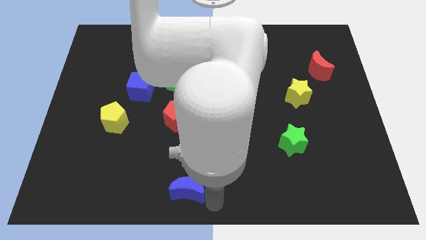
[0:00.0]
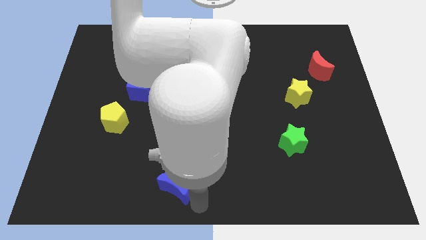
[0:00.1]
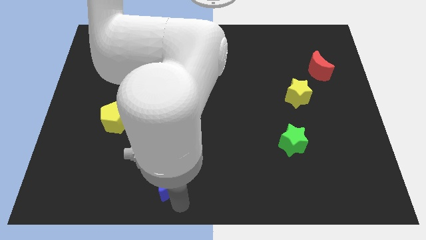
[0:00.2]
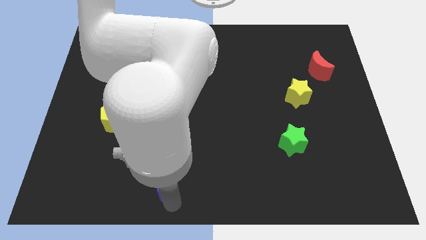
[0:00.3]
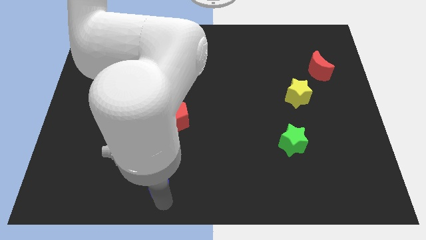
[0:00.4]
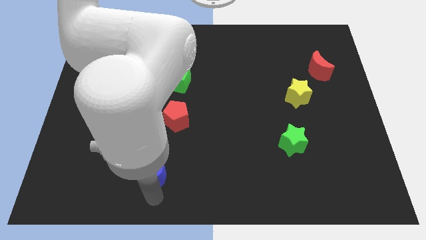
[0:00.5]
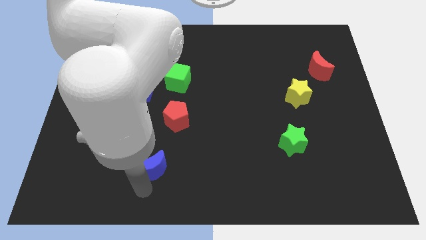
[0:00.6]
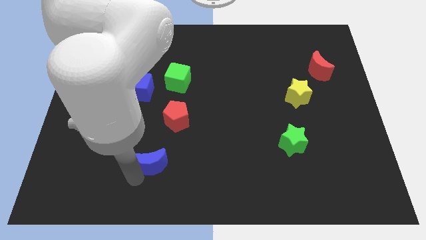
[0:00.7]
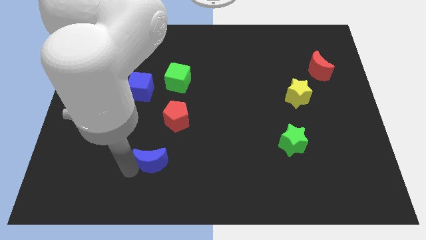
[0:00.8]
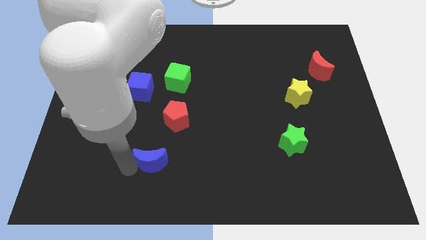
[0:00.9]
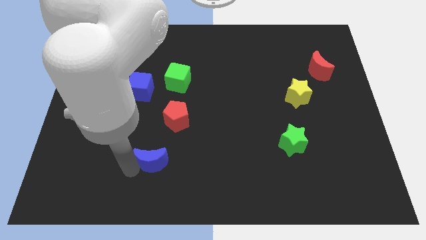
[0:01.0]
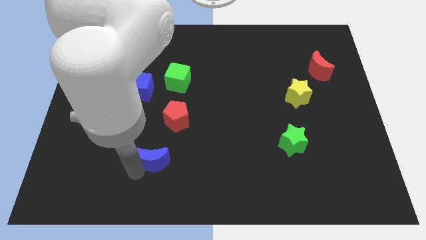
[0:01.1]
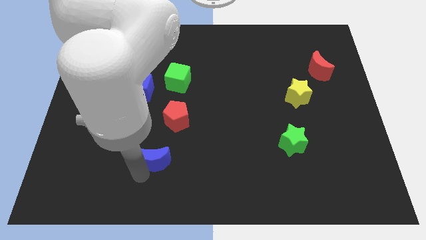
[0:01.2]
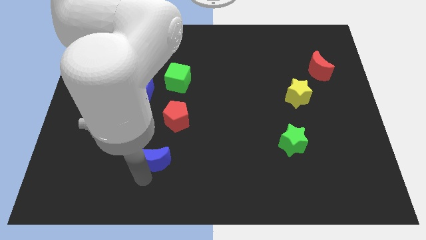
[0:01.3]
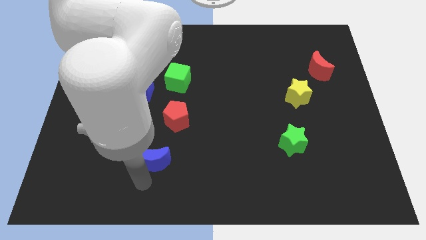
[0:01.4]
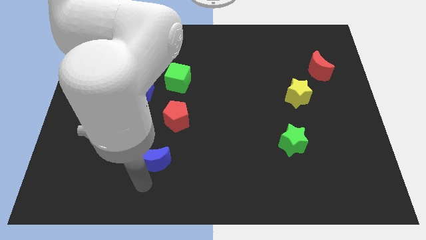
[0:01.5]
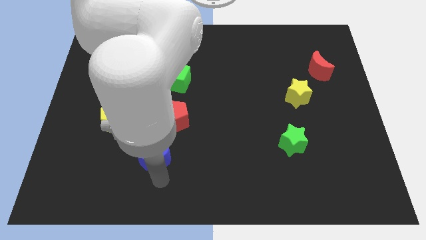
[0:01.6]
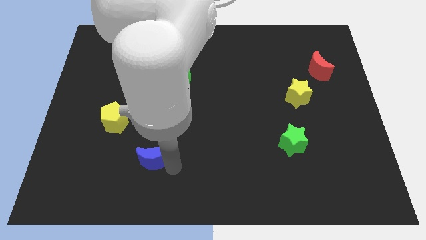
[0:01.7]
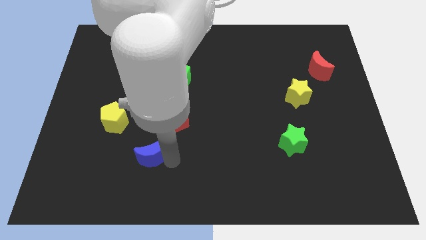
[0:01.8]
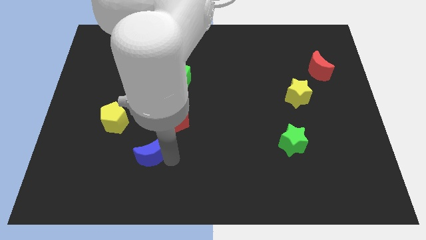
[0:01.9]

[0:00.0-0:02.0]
move the blue crescent towards top

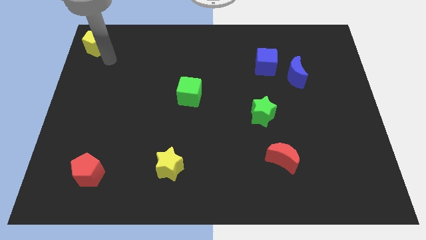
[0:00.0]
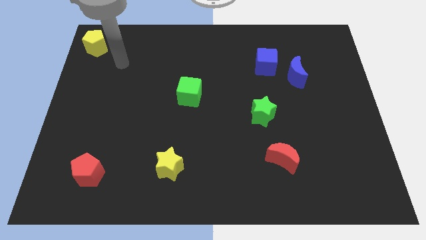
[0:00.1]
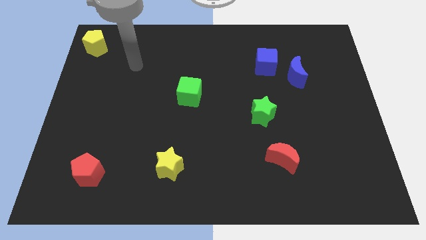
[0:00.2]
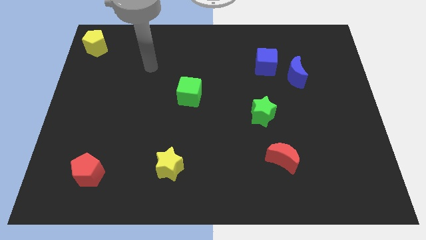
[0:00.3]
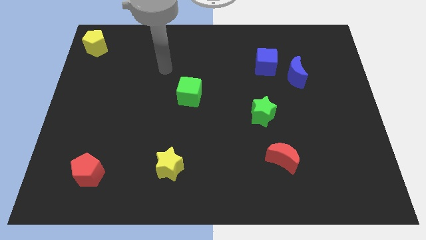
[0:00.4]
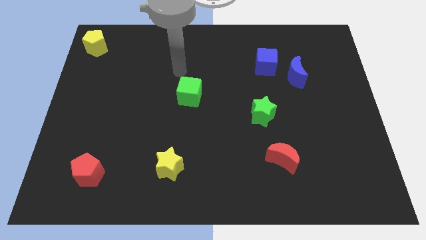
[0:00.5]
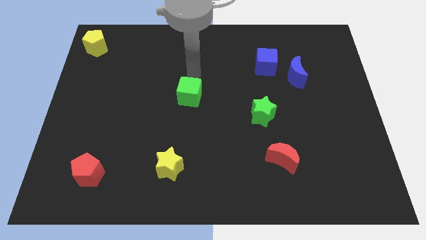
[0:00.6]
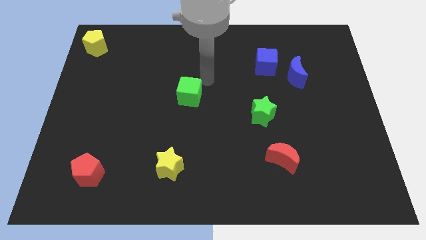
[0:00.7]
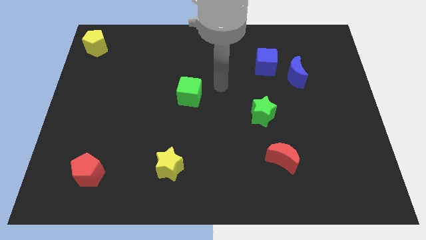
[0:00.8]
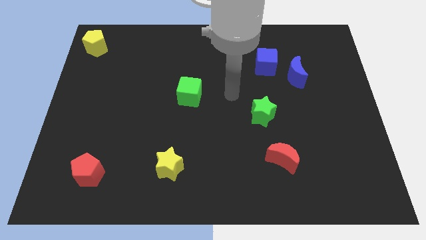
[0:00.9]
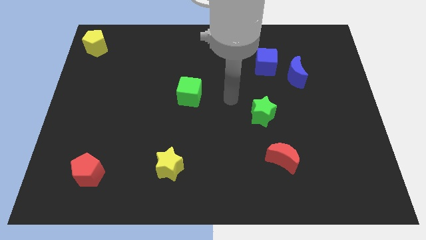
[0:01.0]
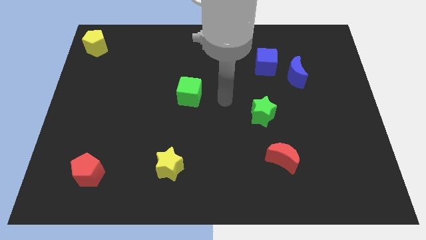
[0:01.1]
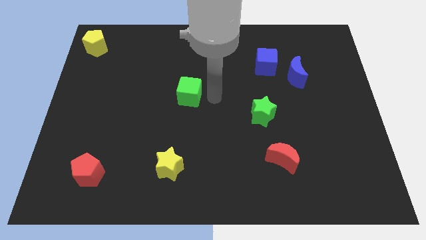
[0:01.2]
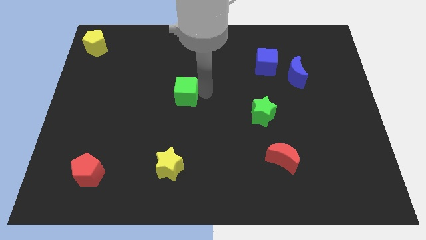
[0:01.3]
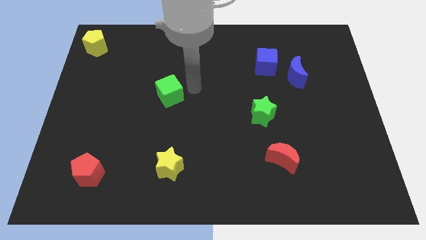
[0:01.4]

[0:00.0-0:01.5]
put your arm at the top right side of the green cube

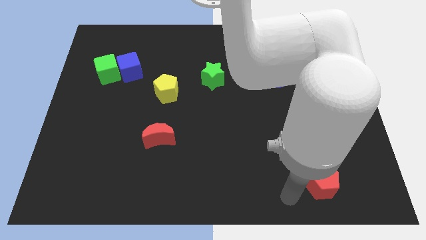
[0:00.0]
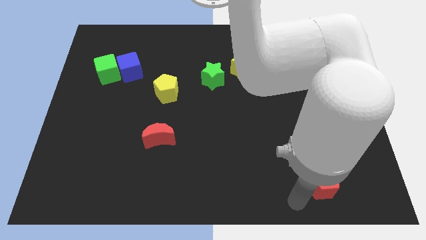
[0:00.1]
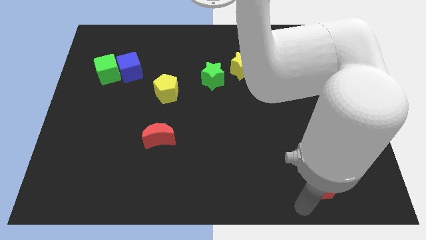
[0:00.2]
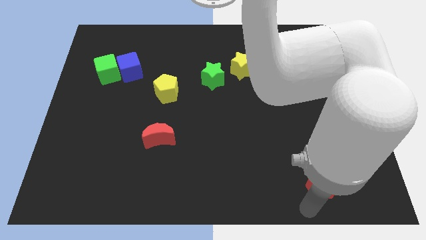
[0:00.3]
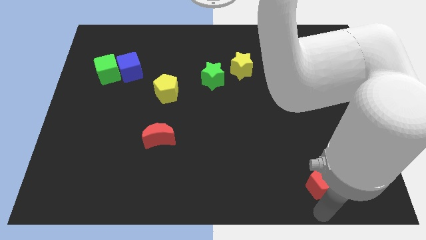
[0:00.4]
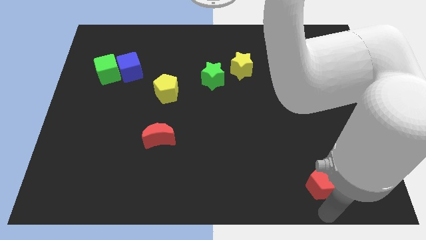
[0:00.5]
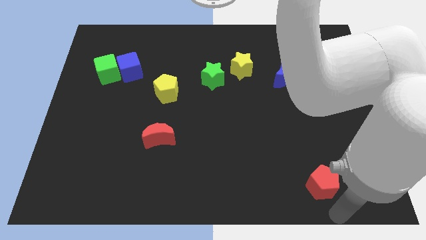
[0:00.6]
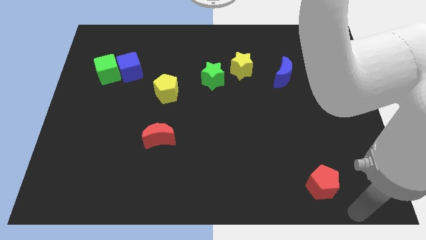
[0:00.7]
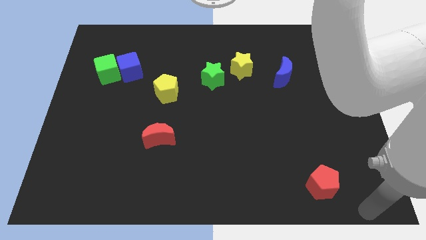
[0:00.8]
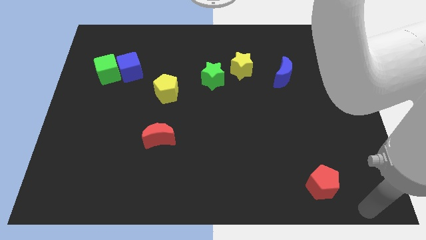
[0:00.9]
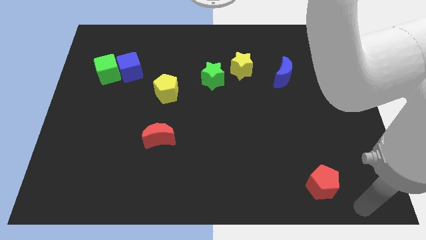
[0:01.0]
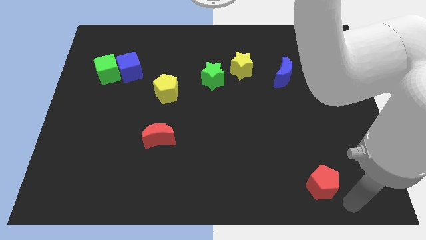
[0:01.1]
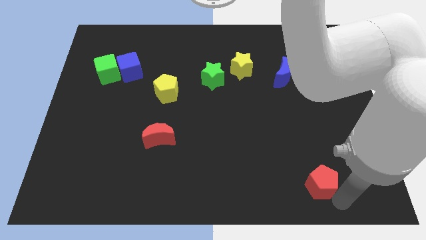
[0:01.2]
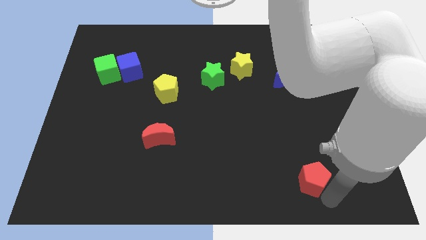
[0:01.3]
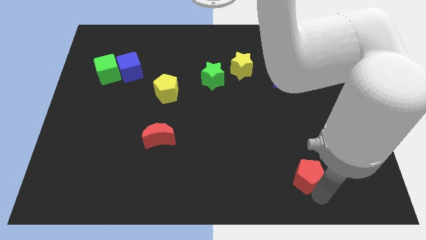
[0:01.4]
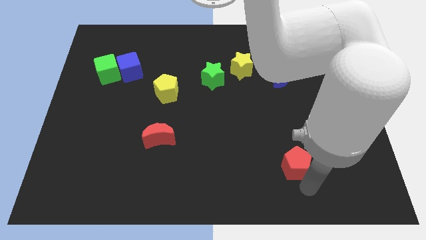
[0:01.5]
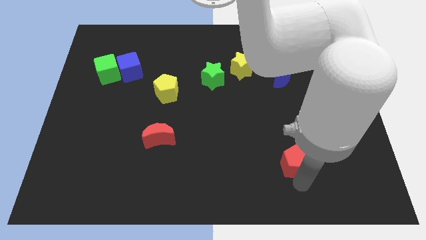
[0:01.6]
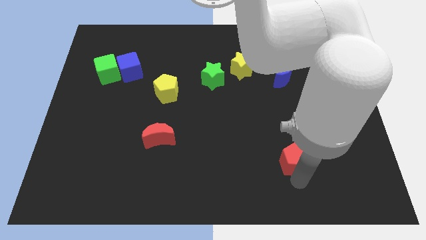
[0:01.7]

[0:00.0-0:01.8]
move the red pentagon up slightly

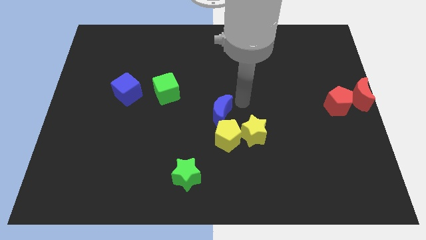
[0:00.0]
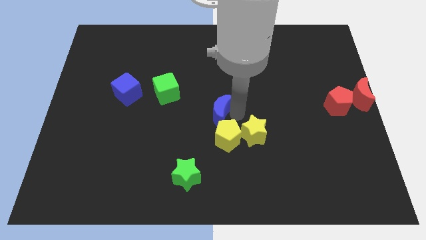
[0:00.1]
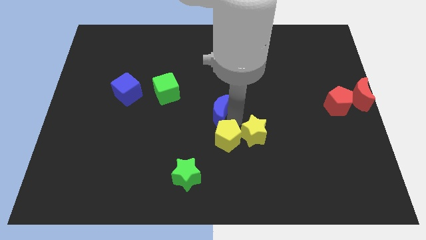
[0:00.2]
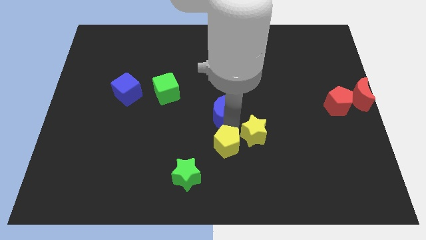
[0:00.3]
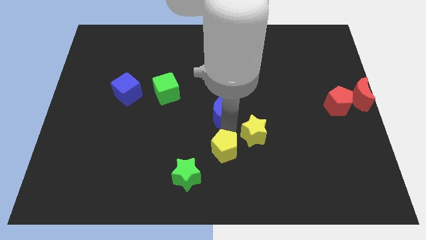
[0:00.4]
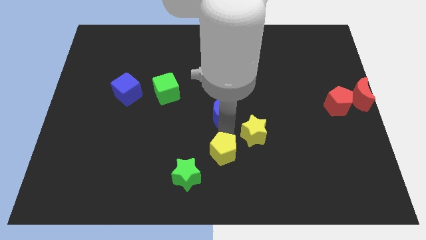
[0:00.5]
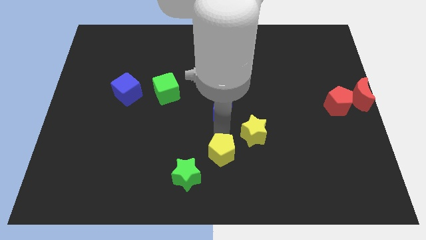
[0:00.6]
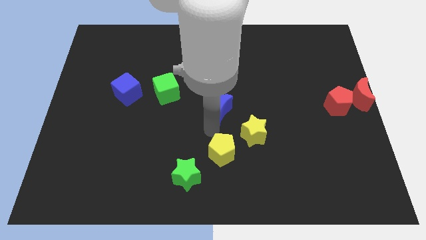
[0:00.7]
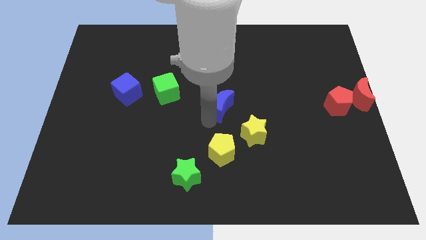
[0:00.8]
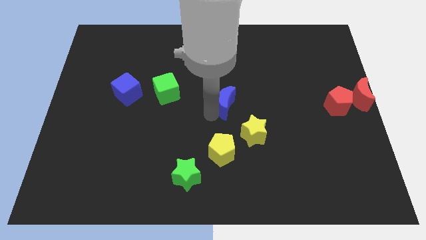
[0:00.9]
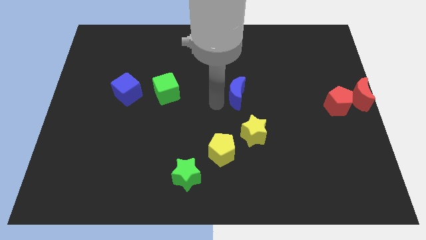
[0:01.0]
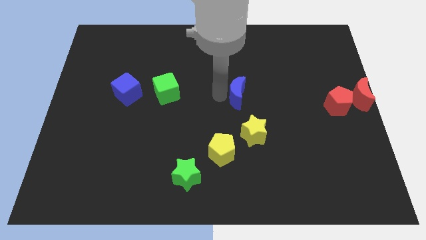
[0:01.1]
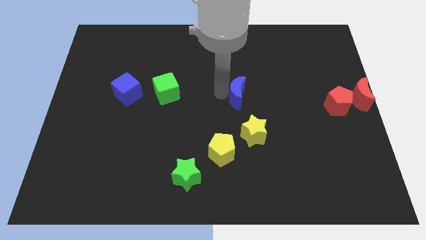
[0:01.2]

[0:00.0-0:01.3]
push the yellow pentagon towards the bottom of the board a bit

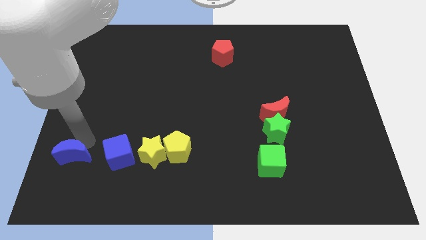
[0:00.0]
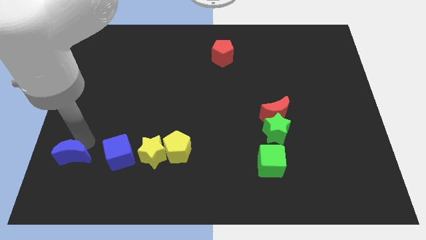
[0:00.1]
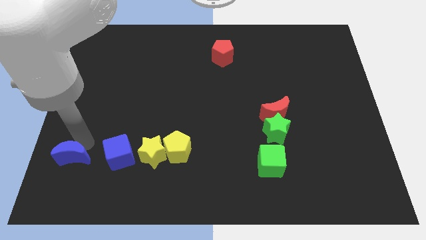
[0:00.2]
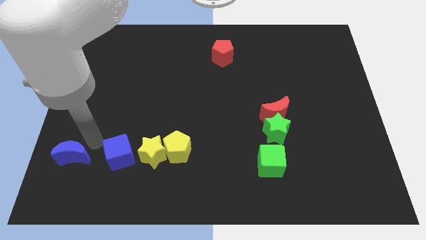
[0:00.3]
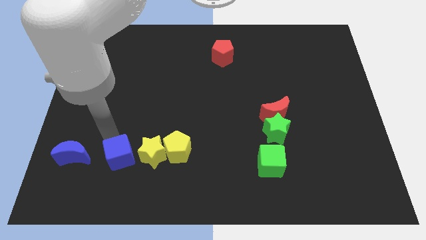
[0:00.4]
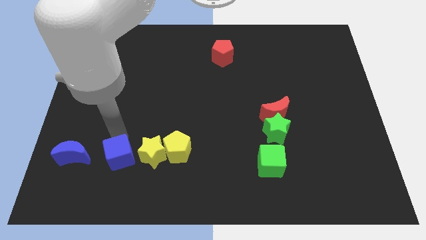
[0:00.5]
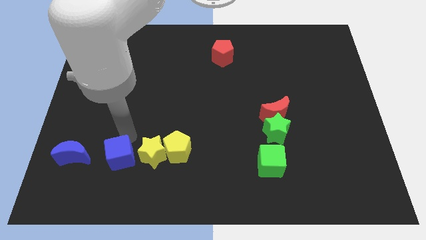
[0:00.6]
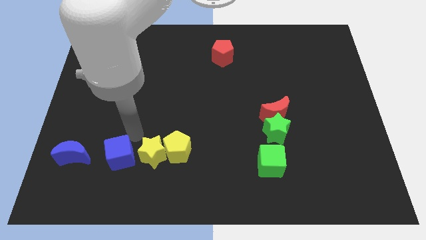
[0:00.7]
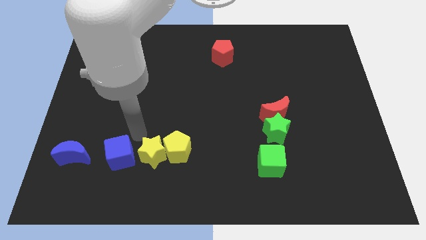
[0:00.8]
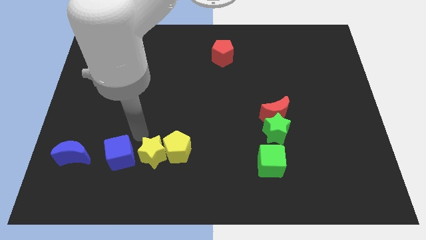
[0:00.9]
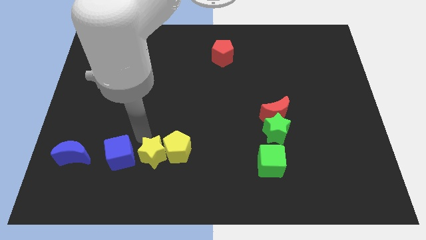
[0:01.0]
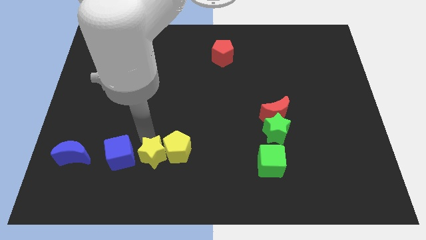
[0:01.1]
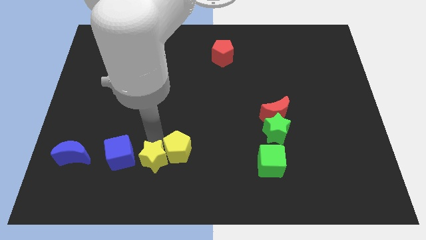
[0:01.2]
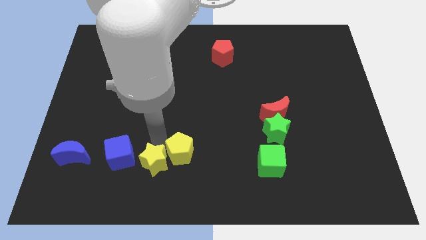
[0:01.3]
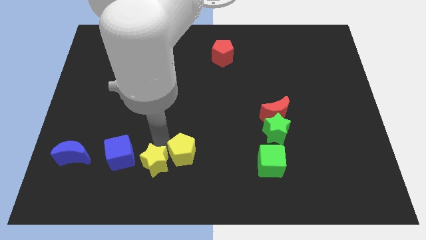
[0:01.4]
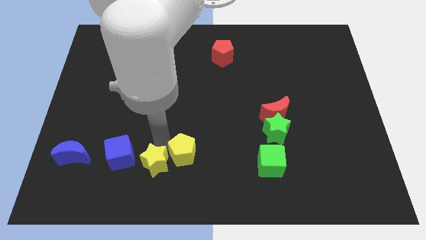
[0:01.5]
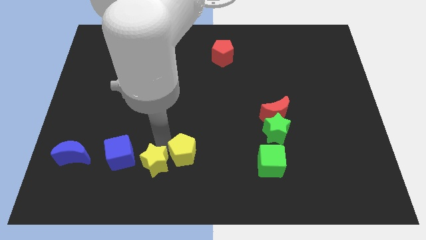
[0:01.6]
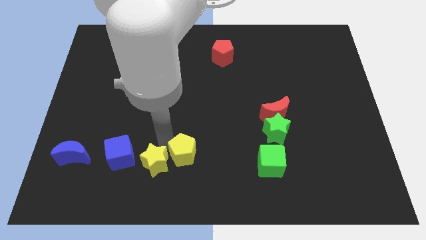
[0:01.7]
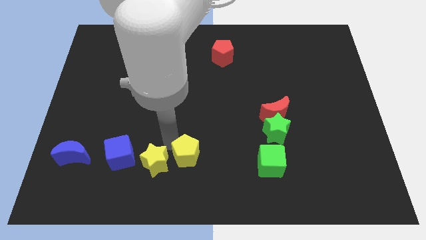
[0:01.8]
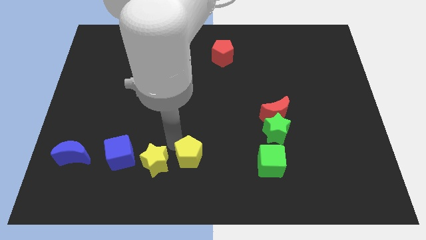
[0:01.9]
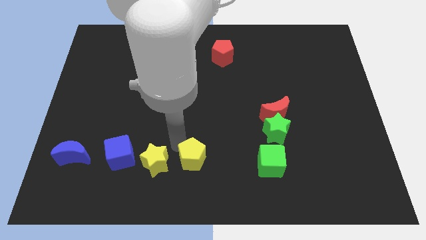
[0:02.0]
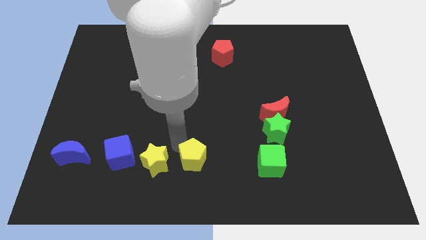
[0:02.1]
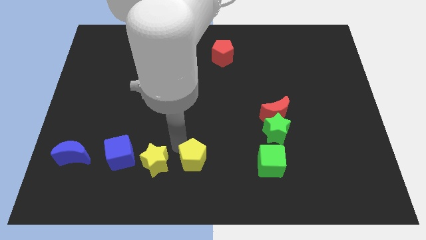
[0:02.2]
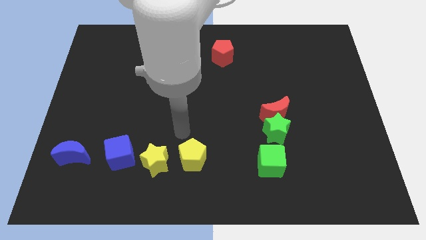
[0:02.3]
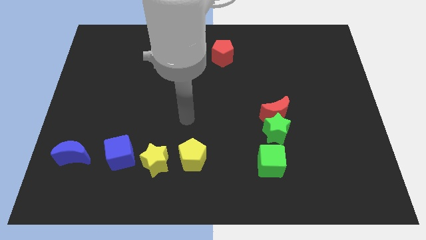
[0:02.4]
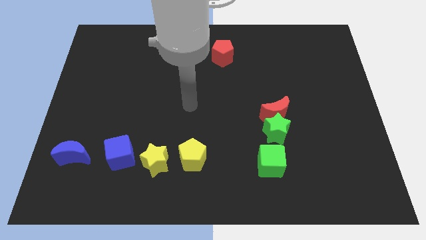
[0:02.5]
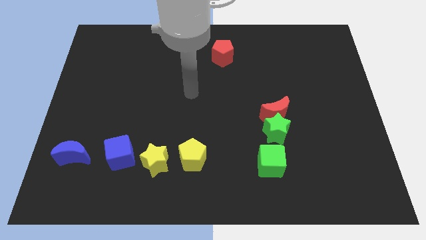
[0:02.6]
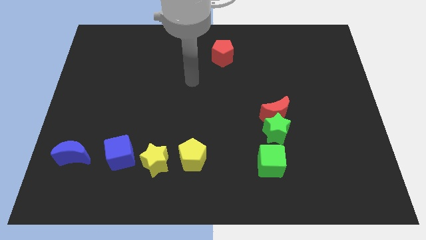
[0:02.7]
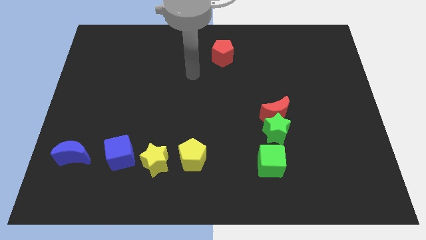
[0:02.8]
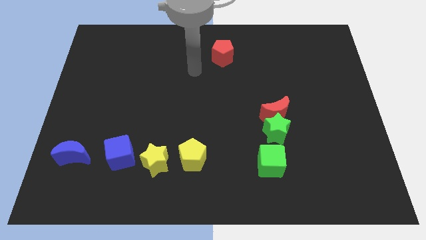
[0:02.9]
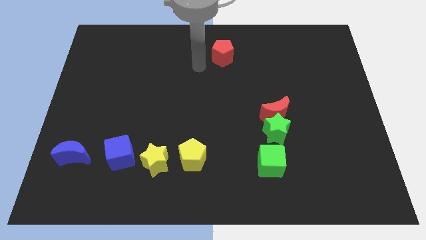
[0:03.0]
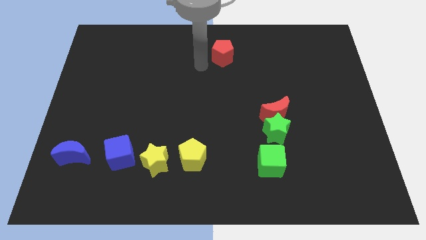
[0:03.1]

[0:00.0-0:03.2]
adjust four blocks at the bottom to form a horizontal line
